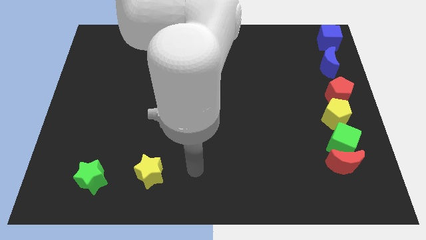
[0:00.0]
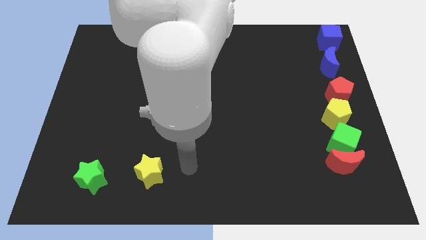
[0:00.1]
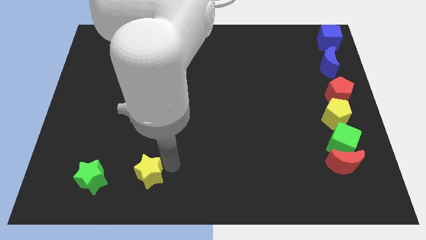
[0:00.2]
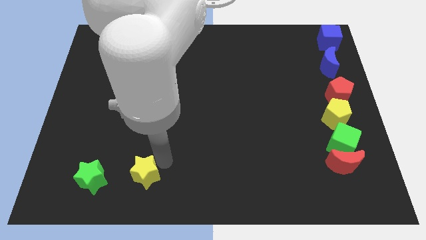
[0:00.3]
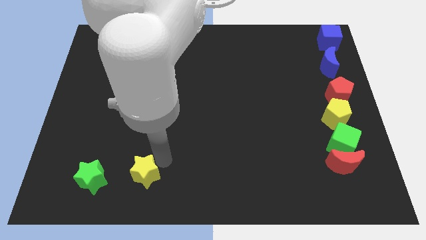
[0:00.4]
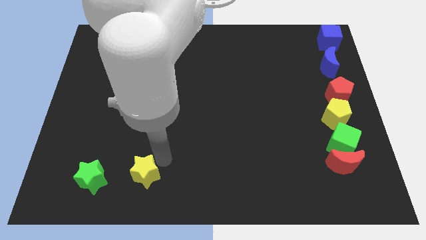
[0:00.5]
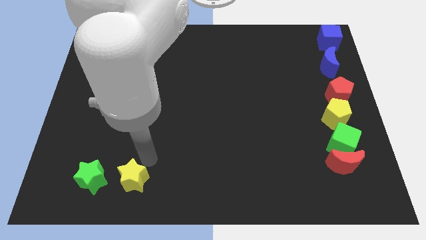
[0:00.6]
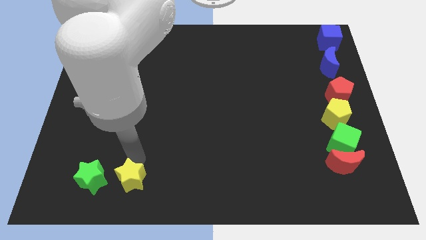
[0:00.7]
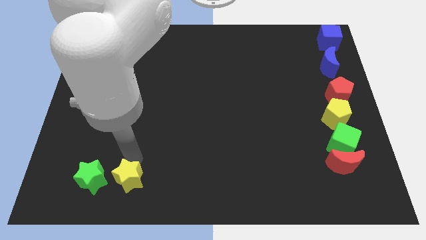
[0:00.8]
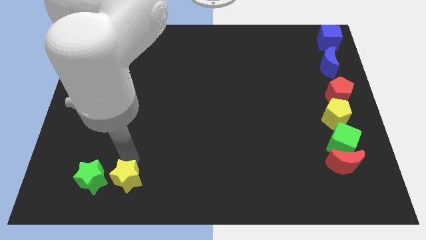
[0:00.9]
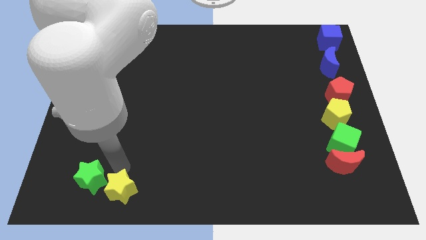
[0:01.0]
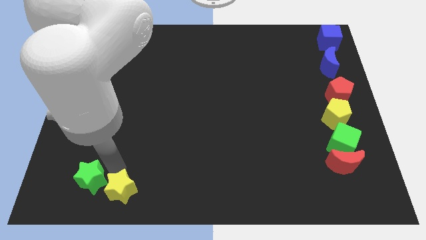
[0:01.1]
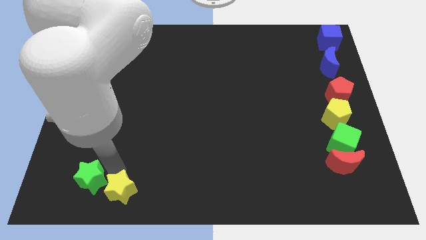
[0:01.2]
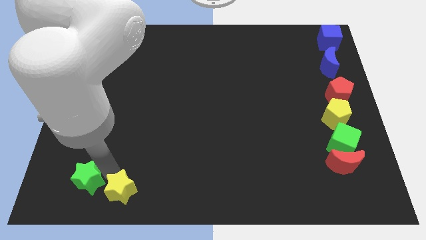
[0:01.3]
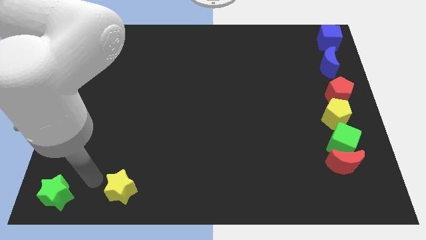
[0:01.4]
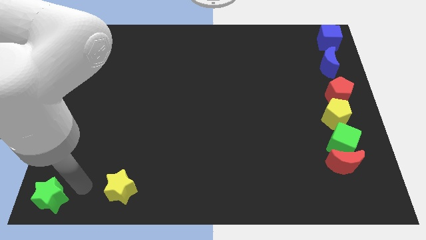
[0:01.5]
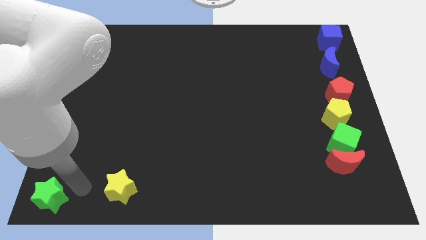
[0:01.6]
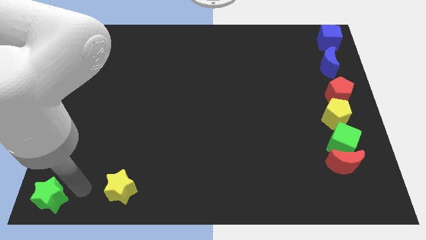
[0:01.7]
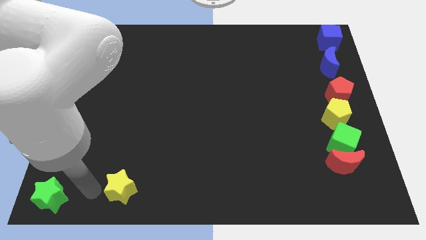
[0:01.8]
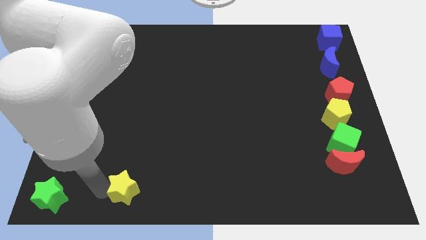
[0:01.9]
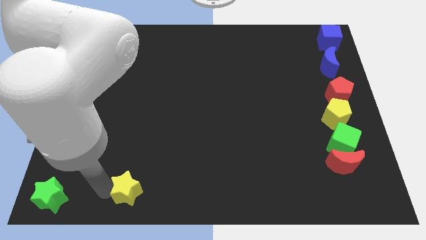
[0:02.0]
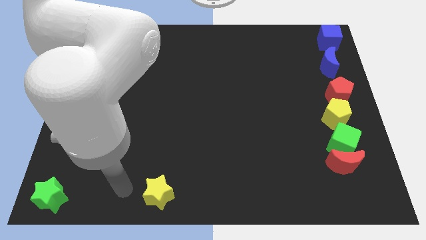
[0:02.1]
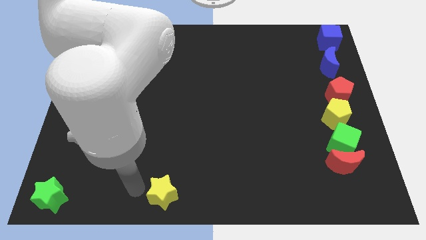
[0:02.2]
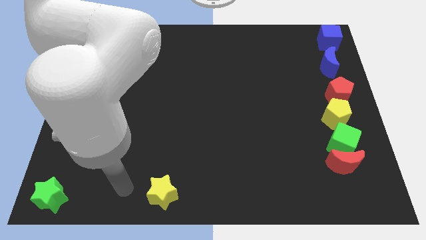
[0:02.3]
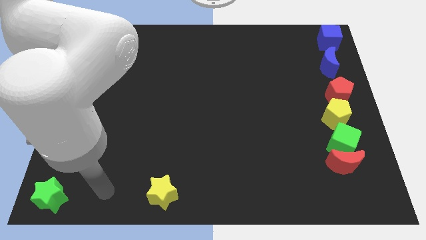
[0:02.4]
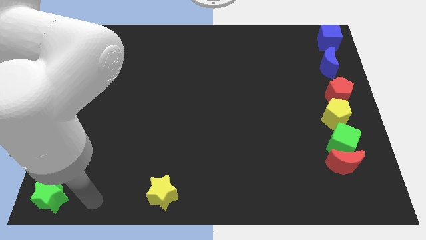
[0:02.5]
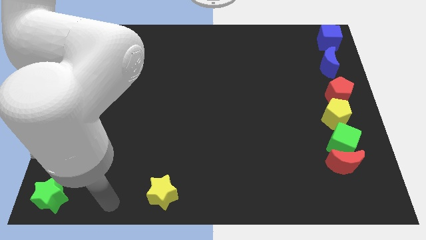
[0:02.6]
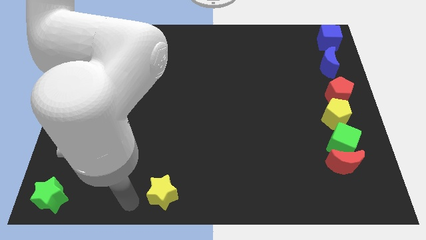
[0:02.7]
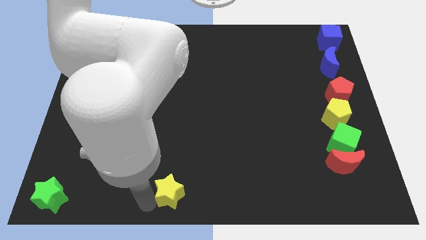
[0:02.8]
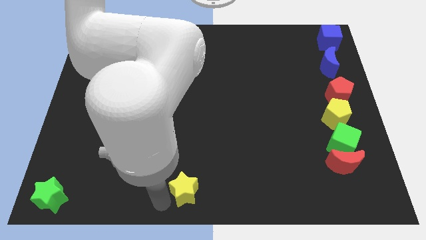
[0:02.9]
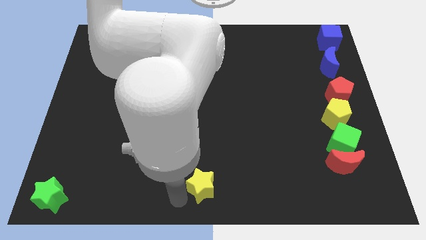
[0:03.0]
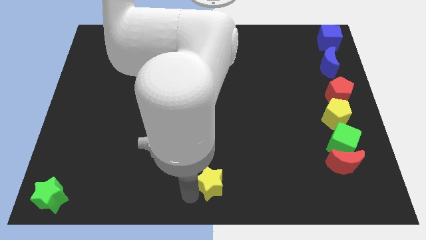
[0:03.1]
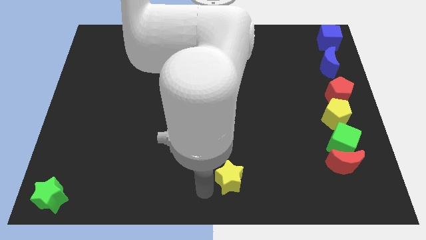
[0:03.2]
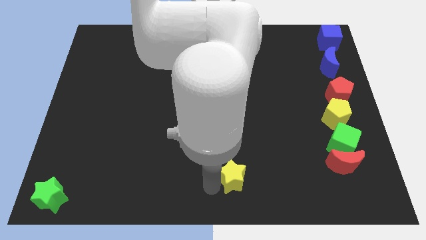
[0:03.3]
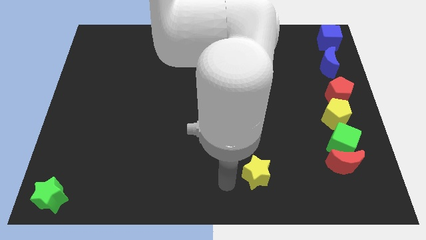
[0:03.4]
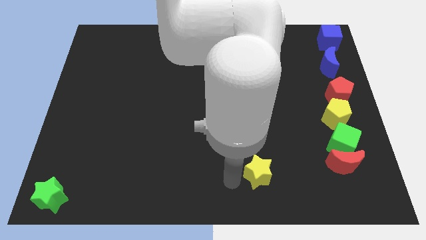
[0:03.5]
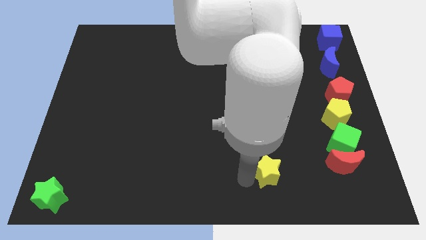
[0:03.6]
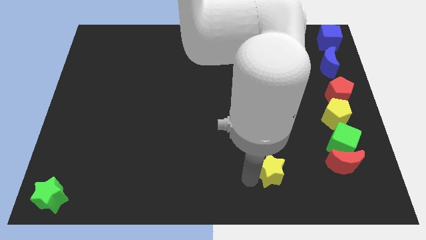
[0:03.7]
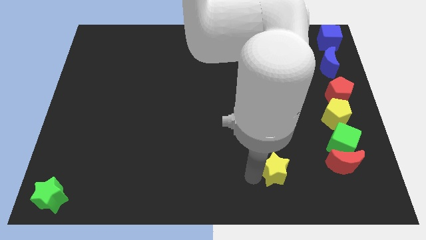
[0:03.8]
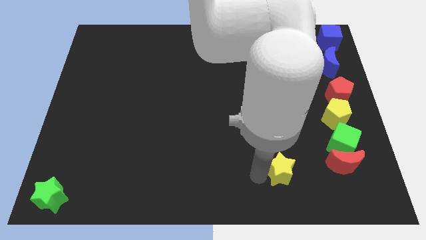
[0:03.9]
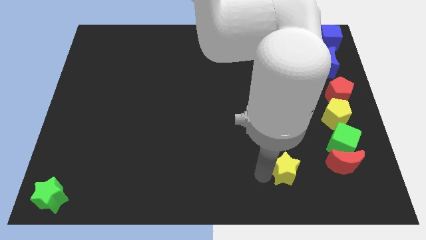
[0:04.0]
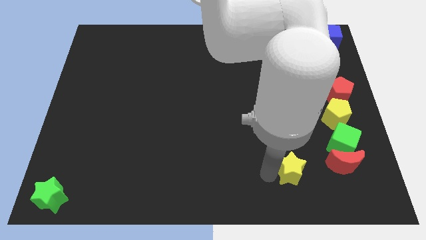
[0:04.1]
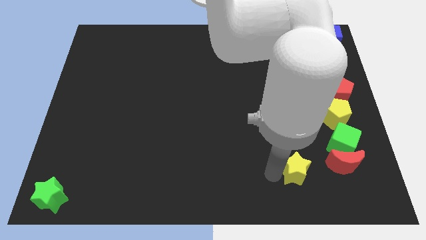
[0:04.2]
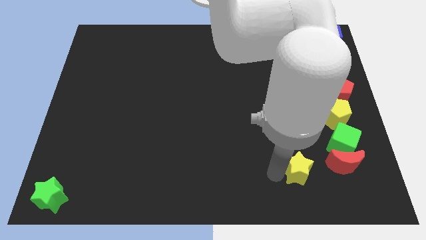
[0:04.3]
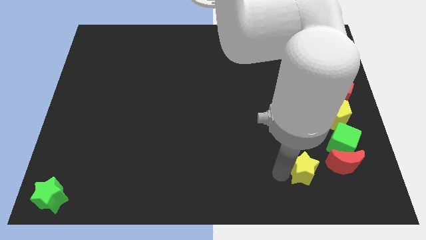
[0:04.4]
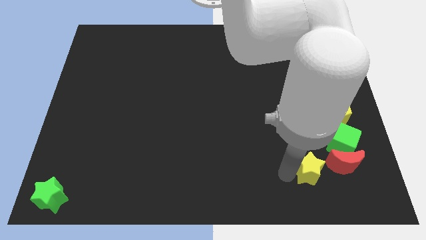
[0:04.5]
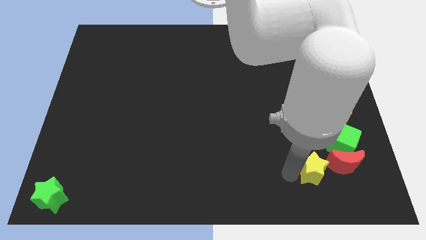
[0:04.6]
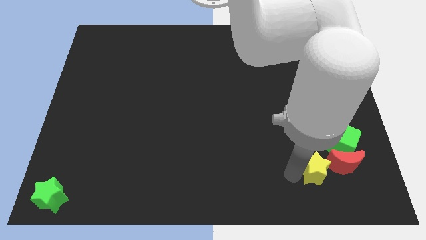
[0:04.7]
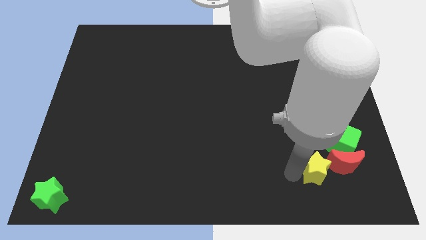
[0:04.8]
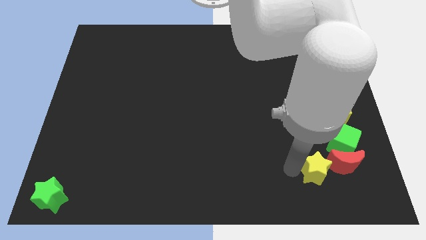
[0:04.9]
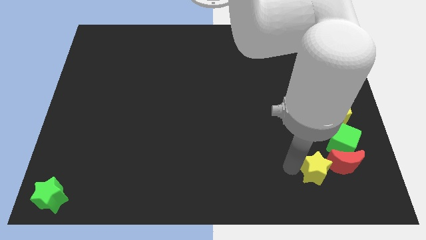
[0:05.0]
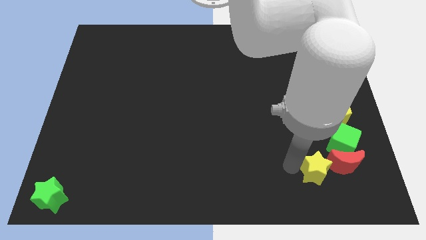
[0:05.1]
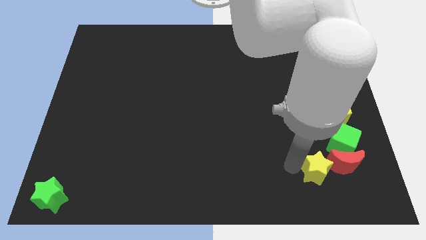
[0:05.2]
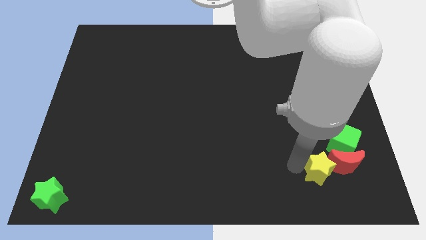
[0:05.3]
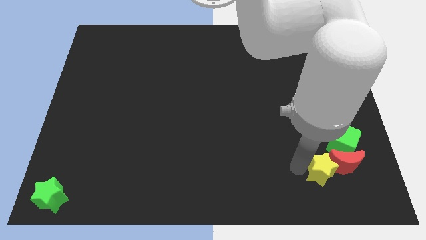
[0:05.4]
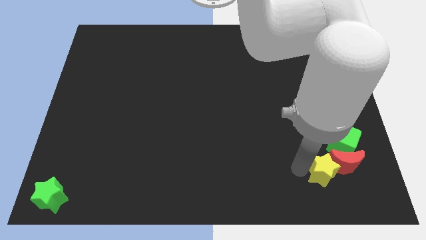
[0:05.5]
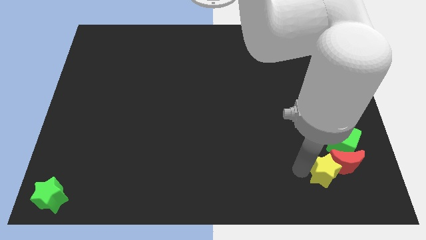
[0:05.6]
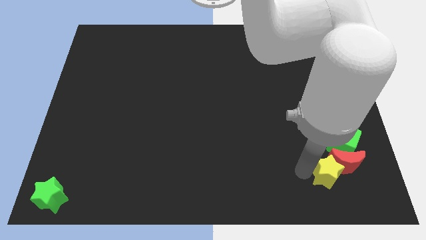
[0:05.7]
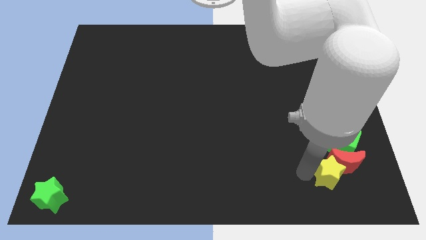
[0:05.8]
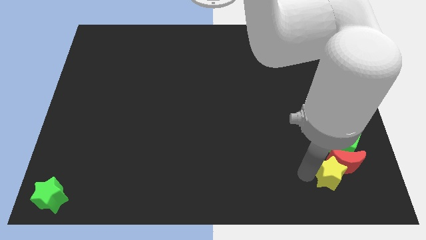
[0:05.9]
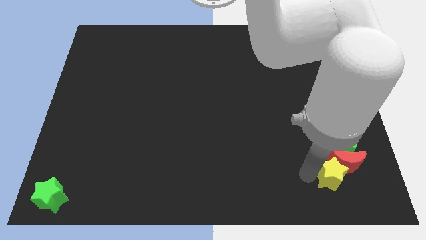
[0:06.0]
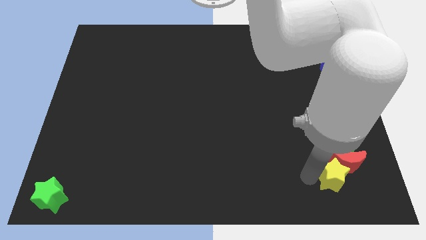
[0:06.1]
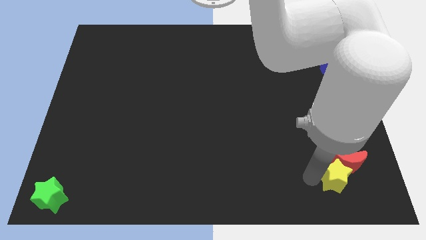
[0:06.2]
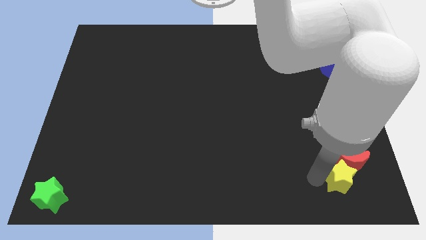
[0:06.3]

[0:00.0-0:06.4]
push the yellow star into the red crescent

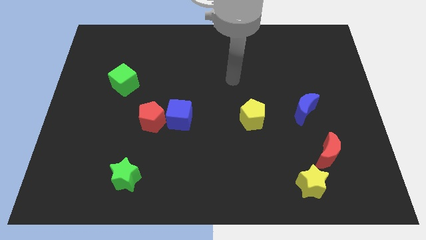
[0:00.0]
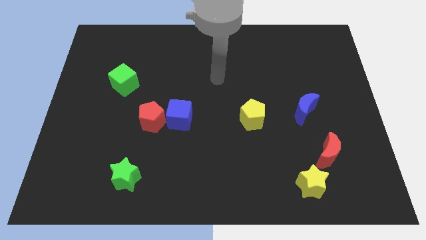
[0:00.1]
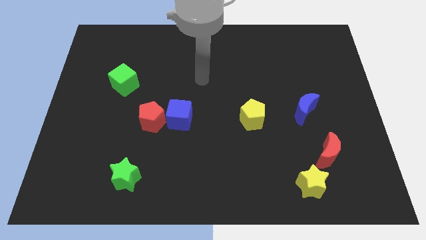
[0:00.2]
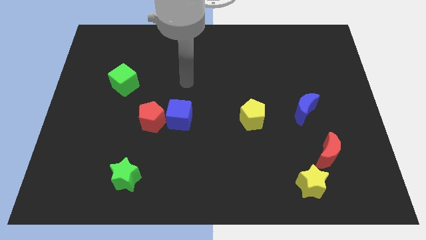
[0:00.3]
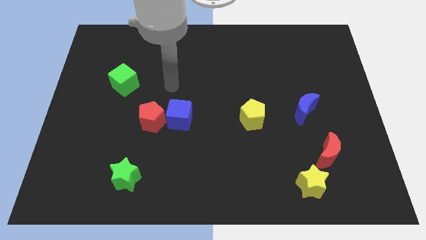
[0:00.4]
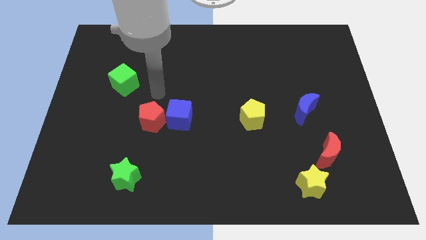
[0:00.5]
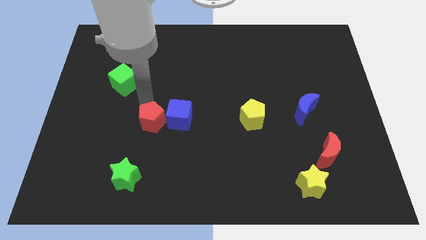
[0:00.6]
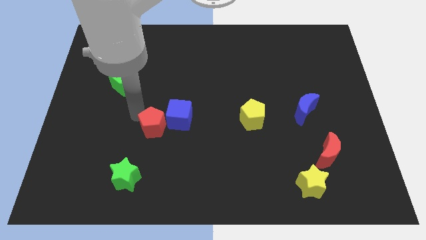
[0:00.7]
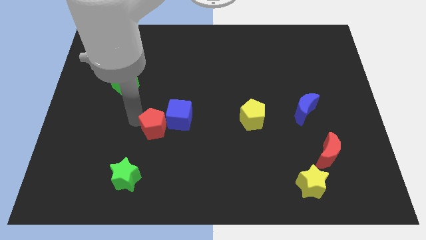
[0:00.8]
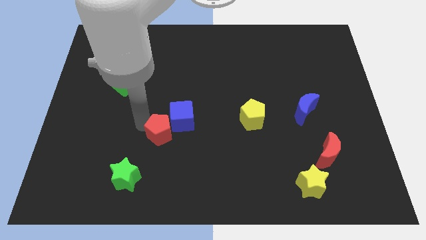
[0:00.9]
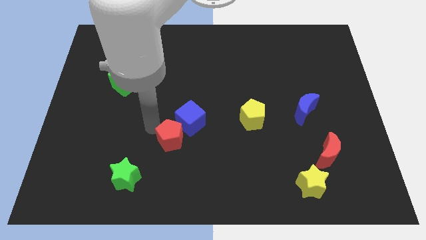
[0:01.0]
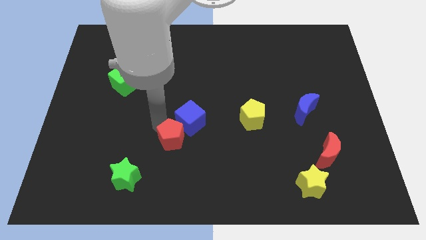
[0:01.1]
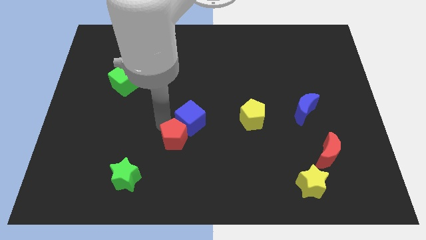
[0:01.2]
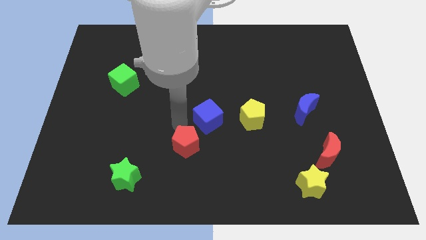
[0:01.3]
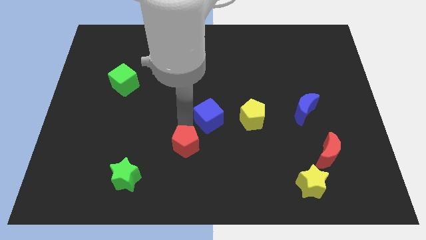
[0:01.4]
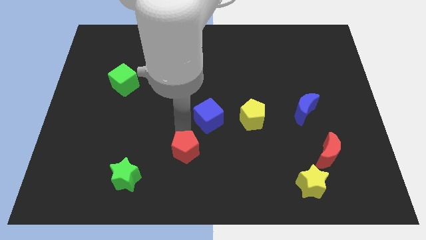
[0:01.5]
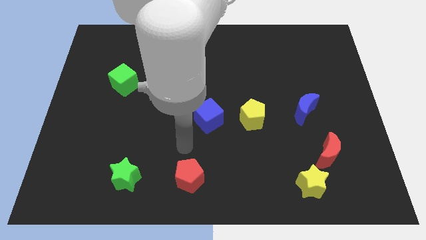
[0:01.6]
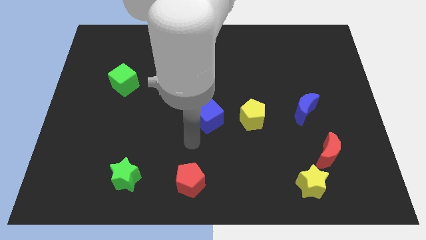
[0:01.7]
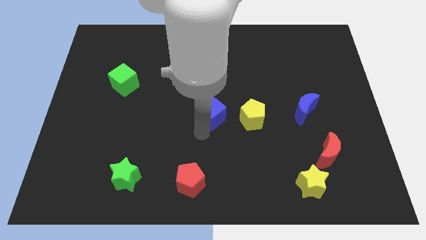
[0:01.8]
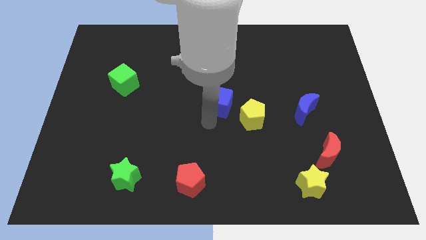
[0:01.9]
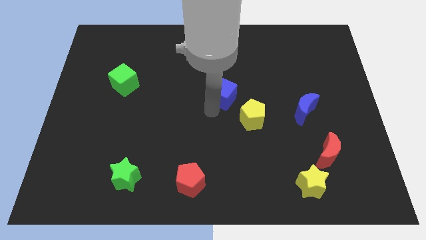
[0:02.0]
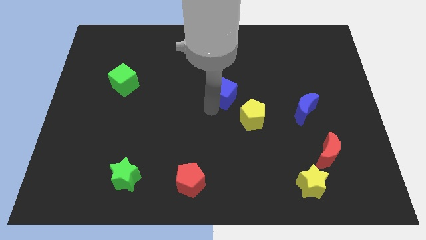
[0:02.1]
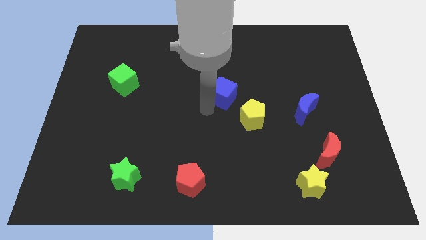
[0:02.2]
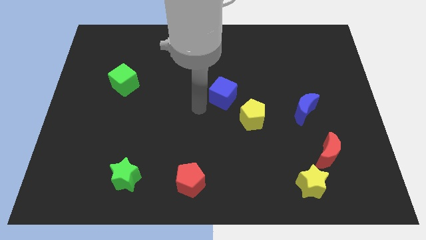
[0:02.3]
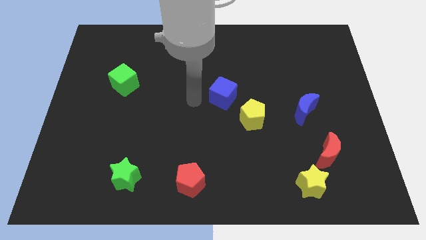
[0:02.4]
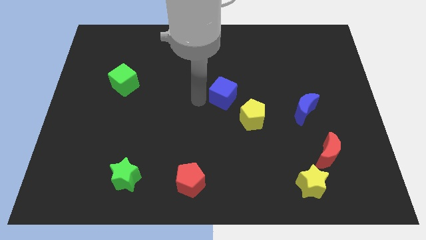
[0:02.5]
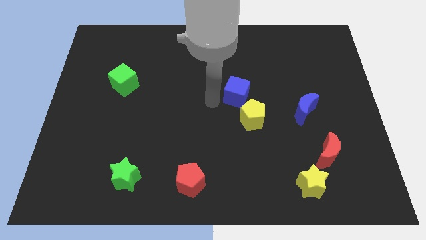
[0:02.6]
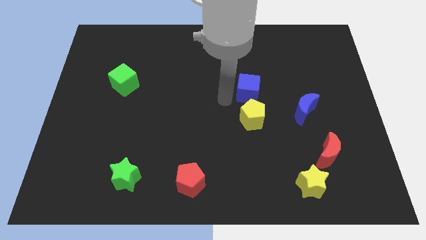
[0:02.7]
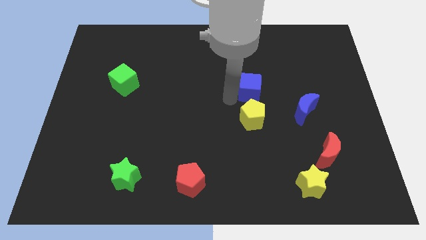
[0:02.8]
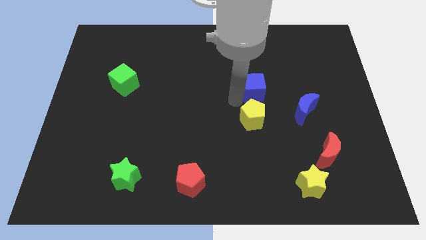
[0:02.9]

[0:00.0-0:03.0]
separate the red pentagon and blue cube
